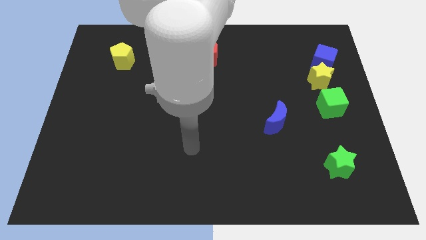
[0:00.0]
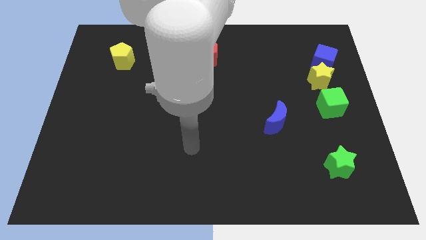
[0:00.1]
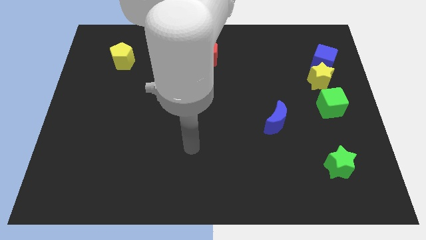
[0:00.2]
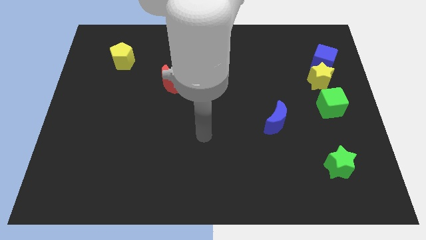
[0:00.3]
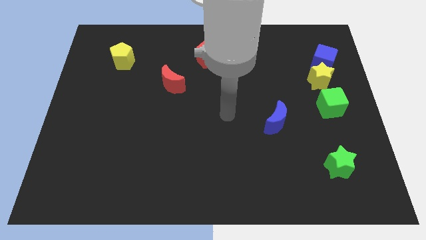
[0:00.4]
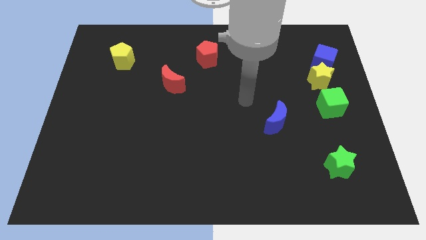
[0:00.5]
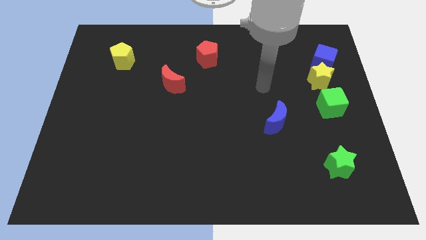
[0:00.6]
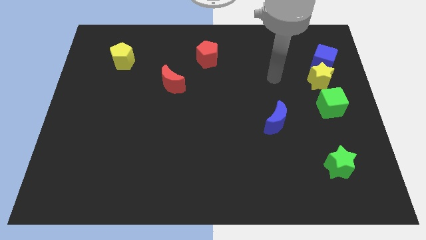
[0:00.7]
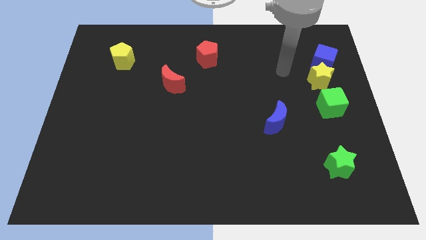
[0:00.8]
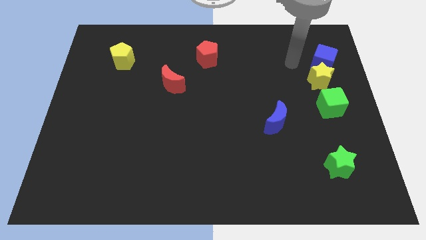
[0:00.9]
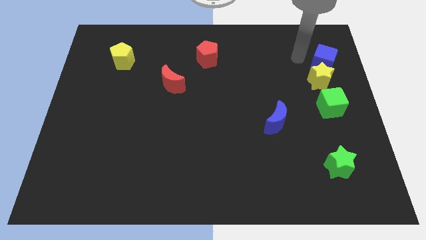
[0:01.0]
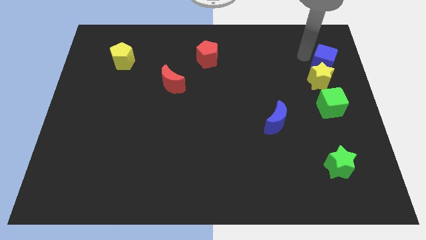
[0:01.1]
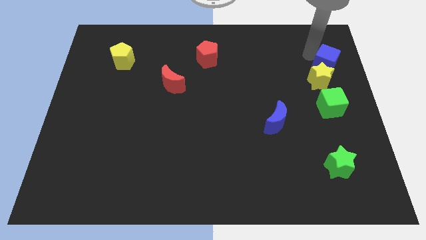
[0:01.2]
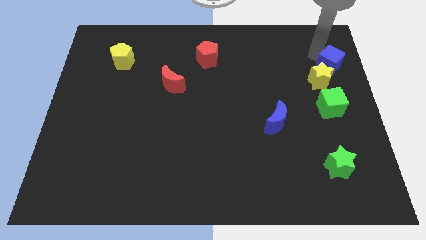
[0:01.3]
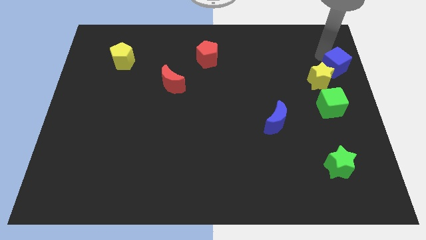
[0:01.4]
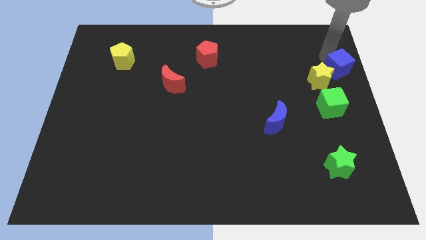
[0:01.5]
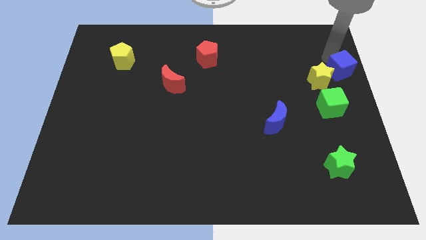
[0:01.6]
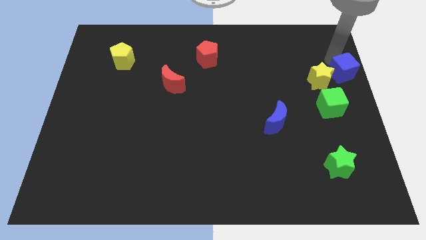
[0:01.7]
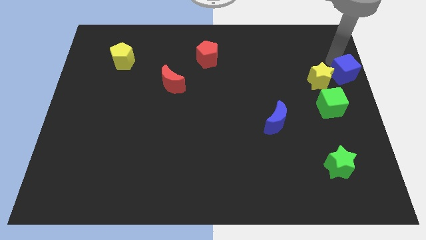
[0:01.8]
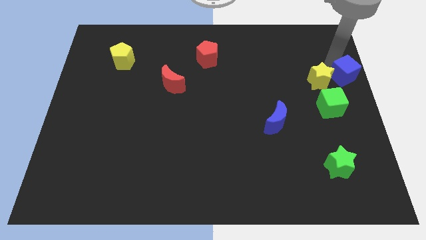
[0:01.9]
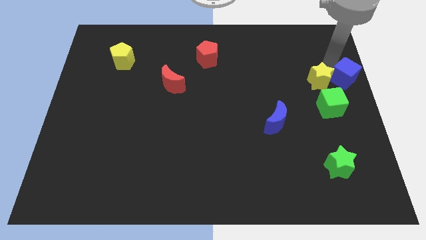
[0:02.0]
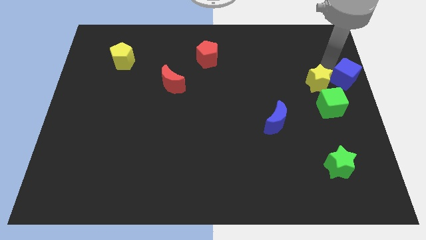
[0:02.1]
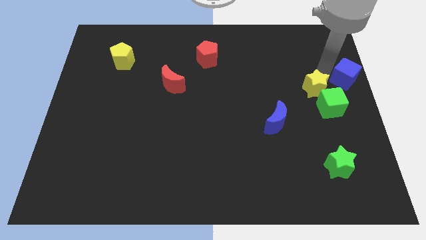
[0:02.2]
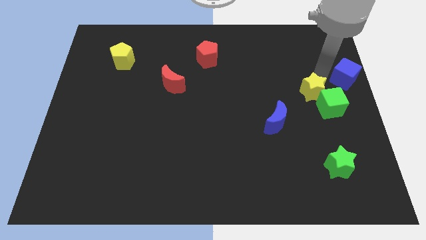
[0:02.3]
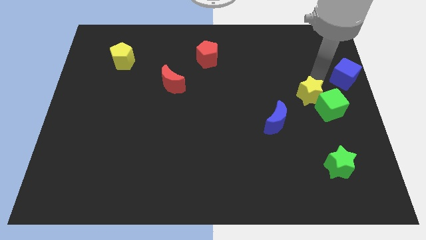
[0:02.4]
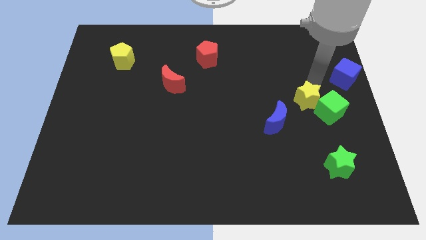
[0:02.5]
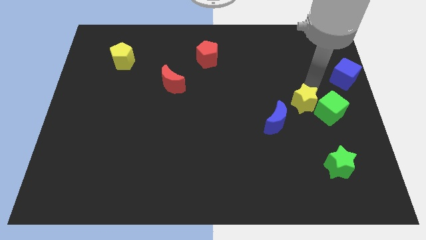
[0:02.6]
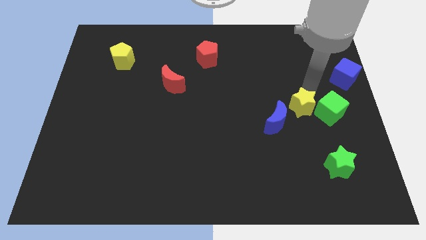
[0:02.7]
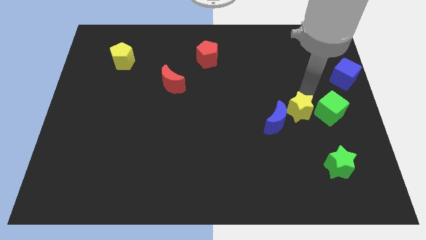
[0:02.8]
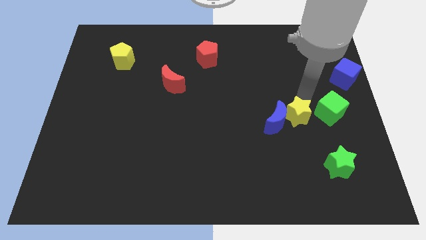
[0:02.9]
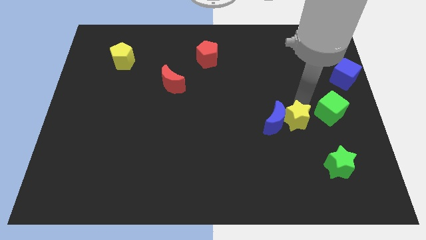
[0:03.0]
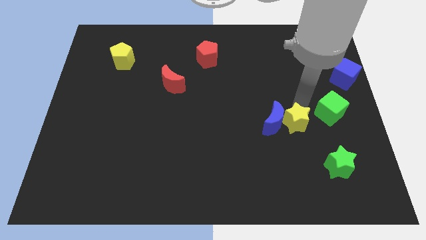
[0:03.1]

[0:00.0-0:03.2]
push the yellow star next to the blue moon

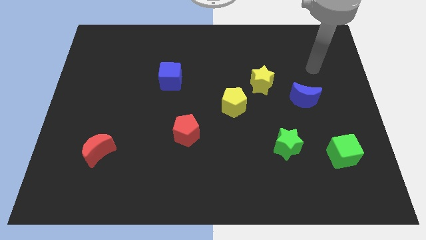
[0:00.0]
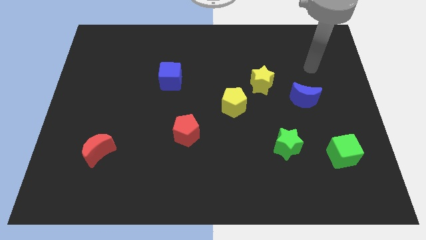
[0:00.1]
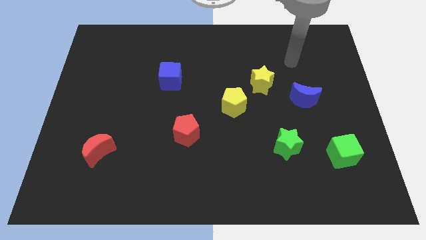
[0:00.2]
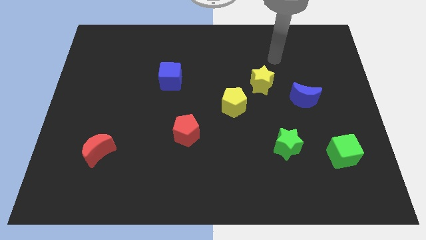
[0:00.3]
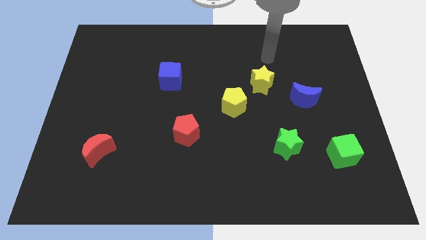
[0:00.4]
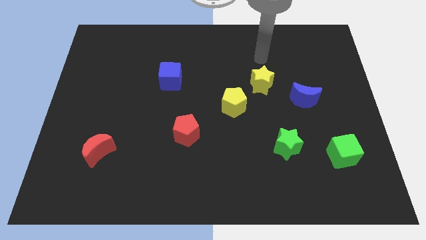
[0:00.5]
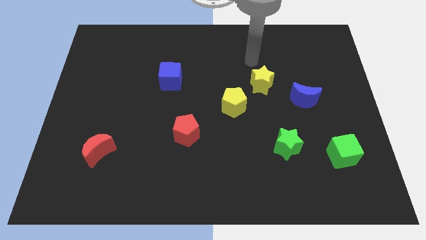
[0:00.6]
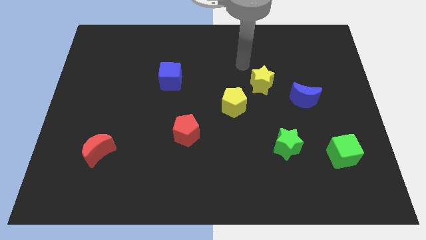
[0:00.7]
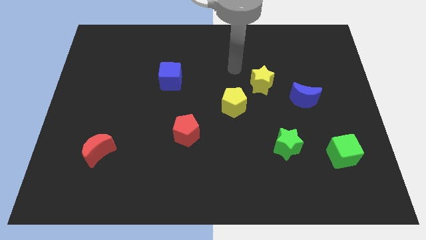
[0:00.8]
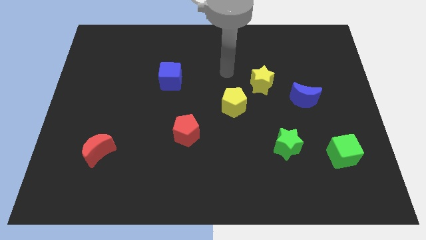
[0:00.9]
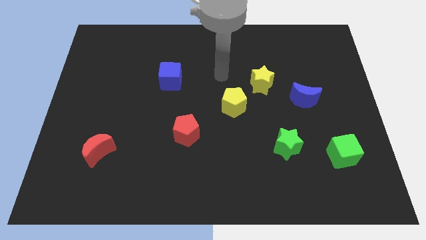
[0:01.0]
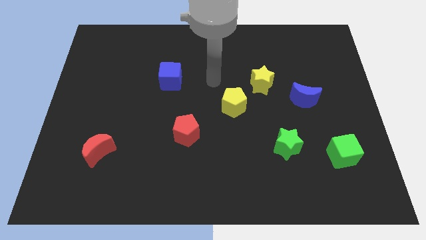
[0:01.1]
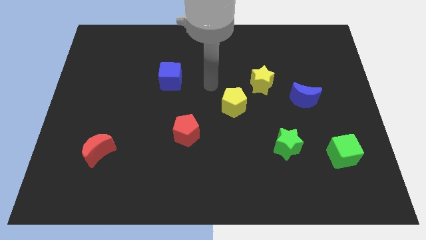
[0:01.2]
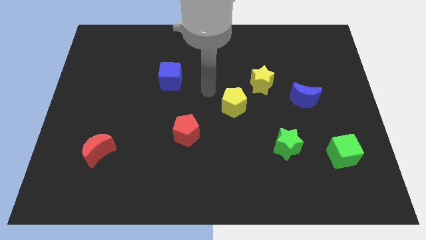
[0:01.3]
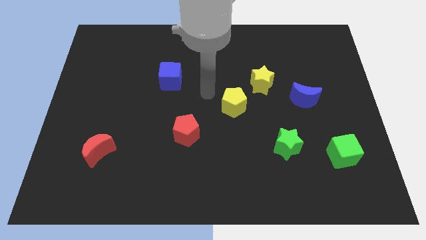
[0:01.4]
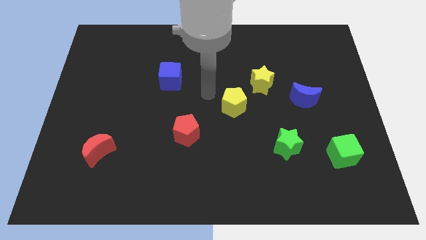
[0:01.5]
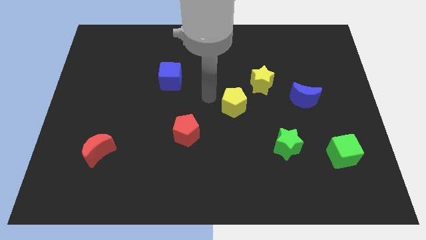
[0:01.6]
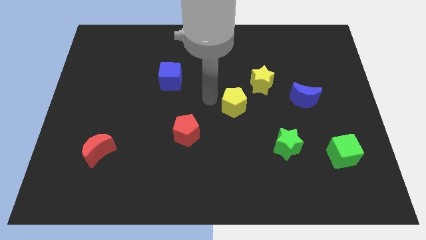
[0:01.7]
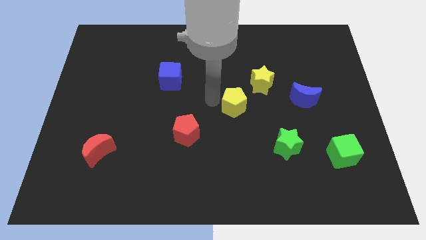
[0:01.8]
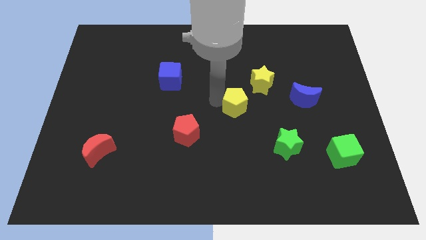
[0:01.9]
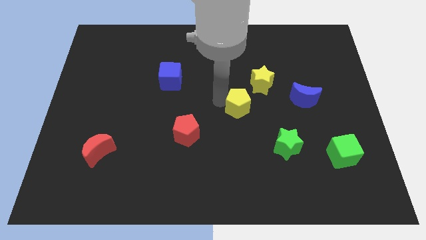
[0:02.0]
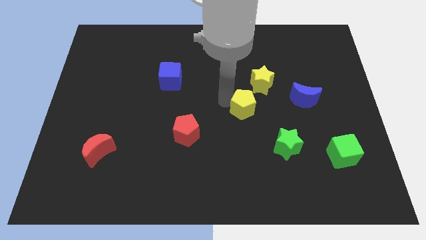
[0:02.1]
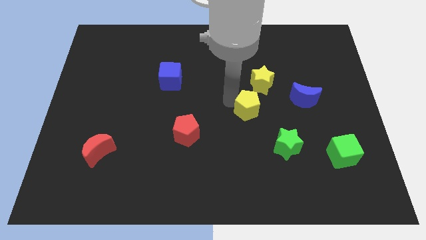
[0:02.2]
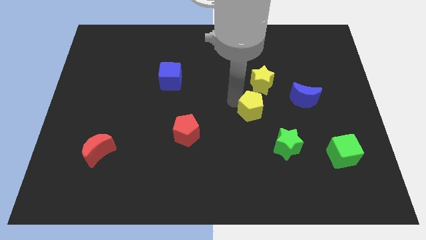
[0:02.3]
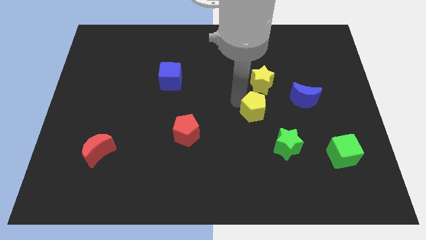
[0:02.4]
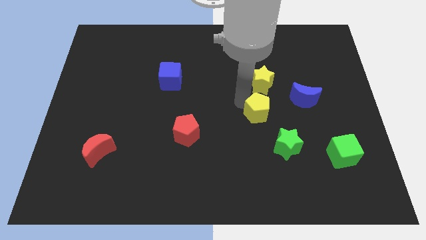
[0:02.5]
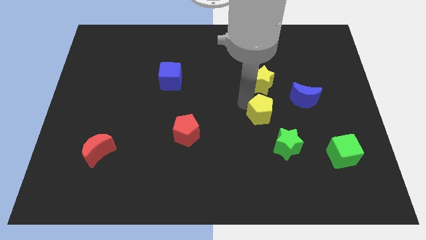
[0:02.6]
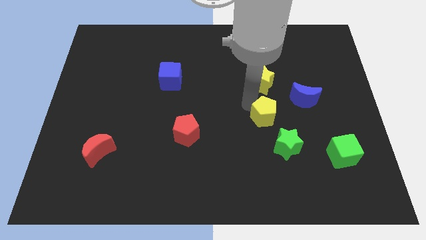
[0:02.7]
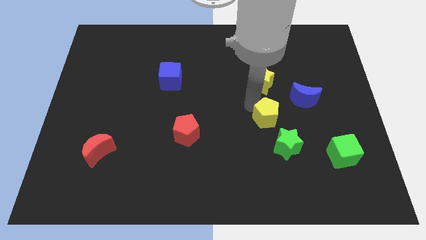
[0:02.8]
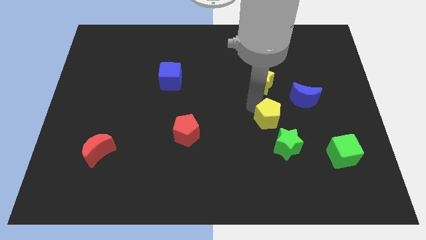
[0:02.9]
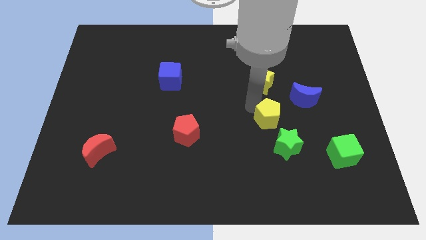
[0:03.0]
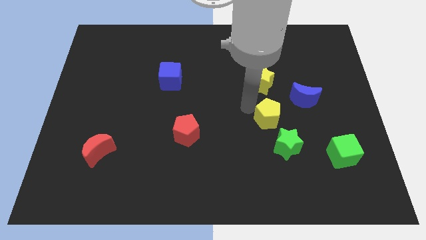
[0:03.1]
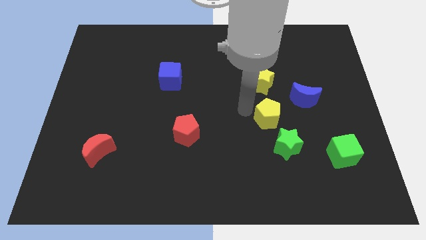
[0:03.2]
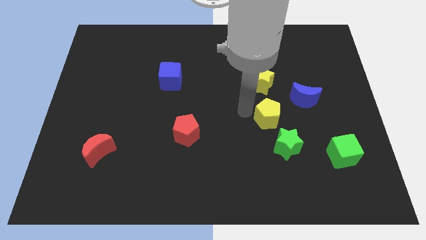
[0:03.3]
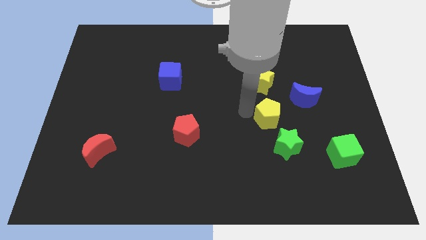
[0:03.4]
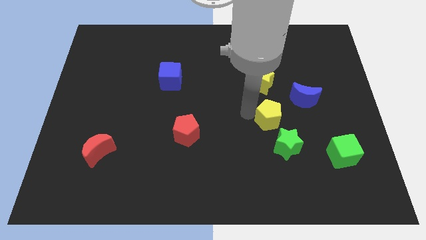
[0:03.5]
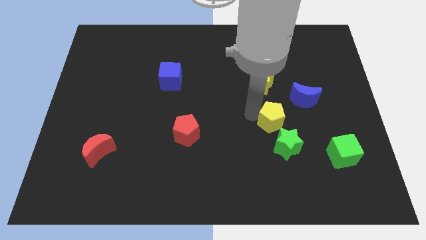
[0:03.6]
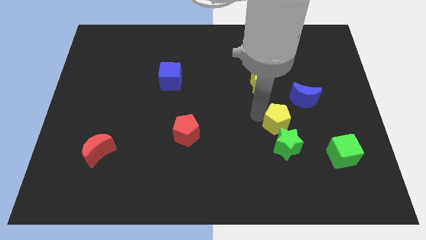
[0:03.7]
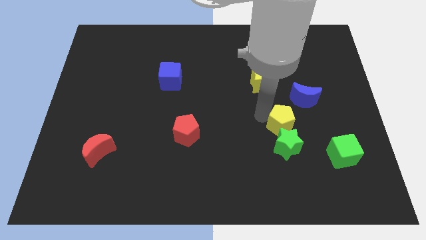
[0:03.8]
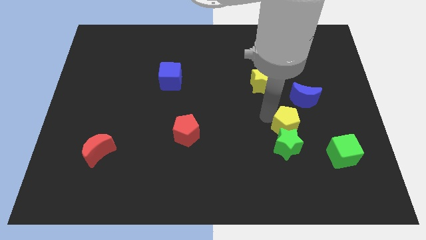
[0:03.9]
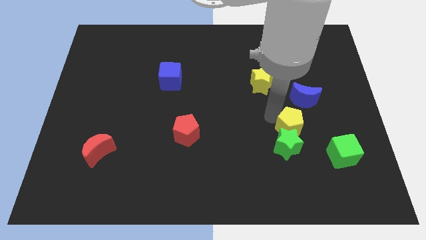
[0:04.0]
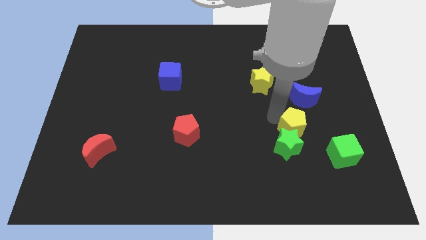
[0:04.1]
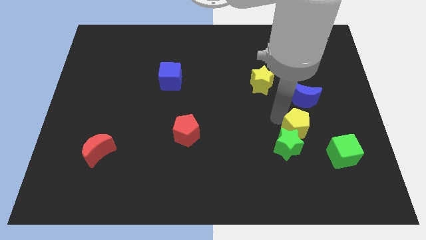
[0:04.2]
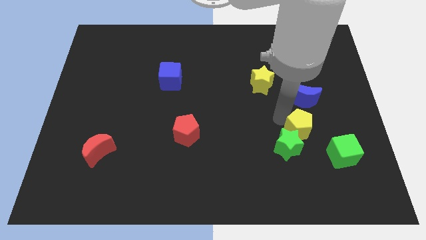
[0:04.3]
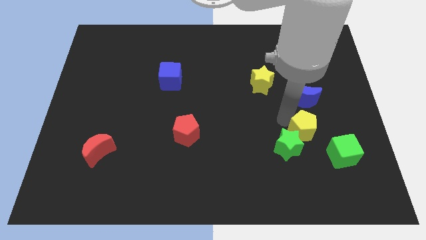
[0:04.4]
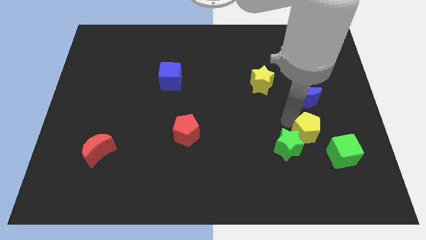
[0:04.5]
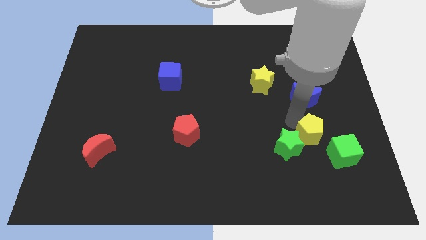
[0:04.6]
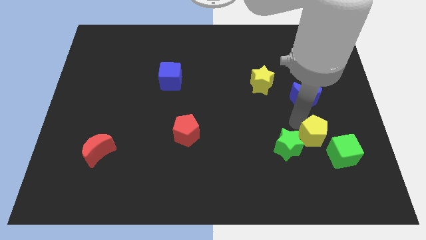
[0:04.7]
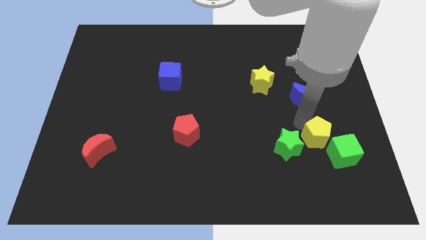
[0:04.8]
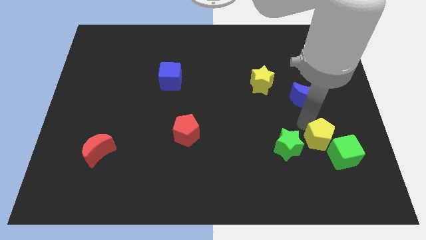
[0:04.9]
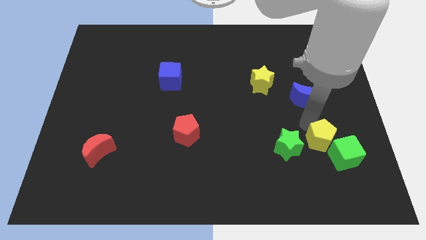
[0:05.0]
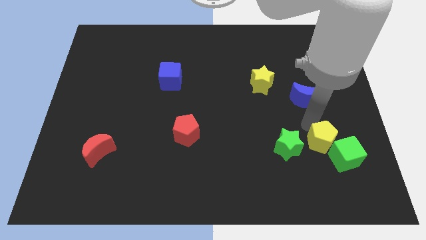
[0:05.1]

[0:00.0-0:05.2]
move the yellow pentagon close to the green cube
